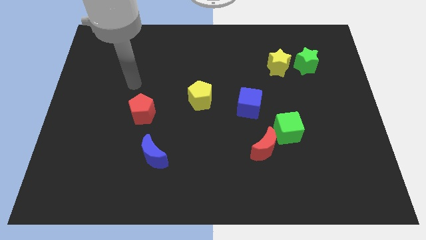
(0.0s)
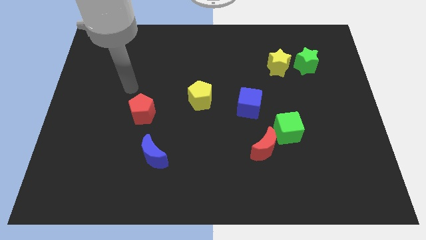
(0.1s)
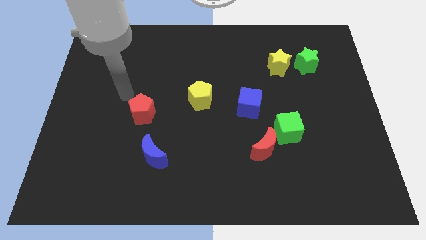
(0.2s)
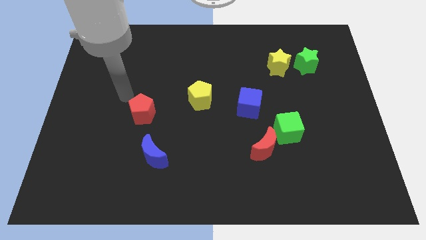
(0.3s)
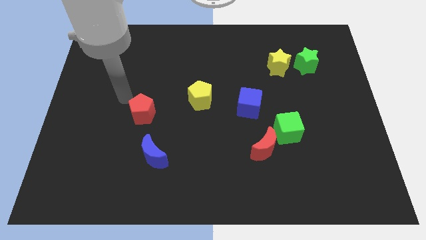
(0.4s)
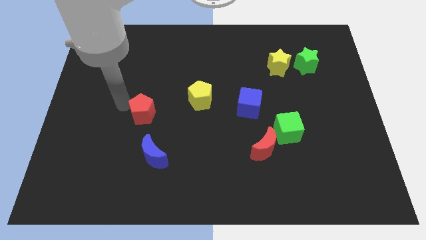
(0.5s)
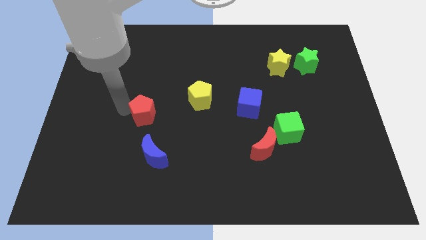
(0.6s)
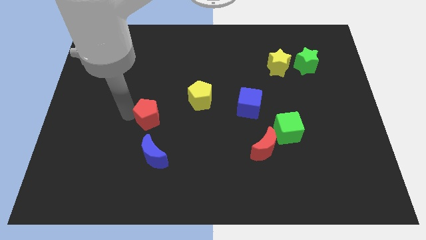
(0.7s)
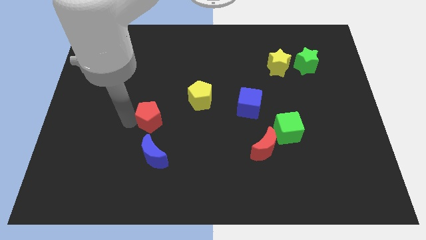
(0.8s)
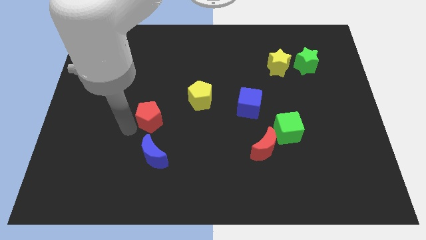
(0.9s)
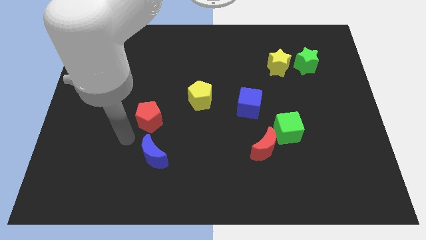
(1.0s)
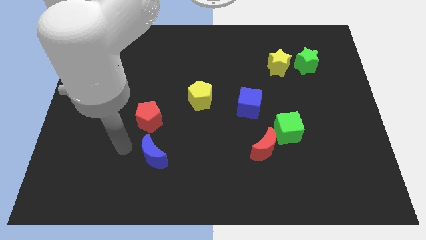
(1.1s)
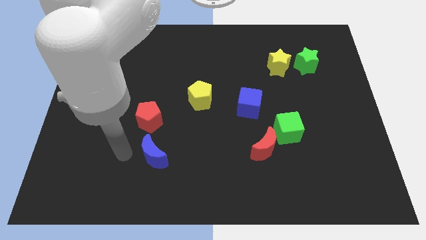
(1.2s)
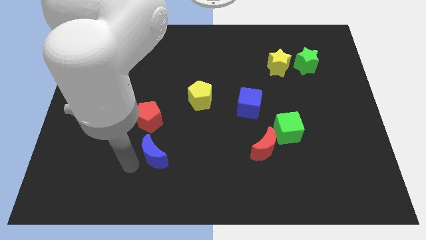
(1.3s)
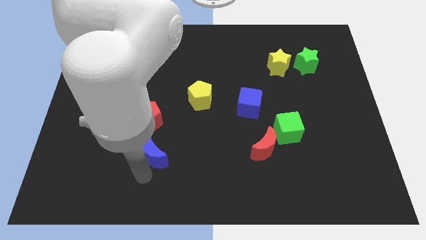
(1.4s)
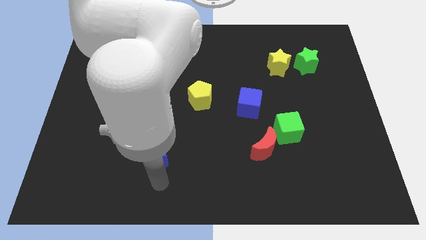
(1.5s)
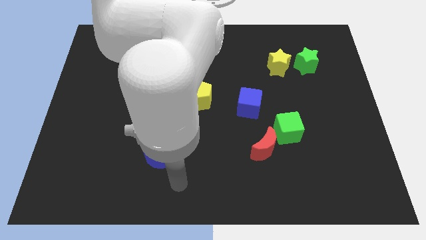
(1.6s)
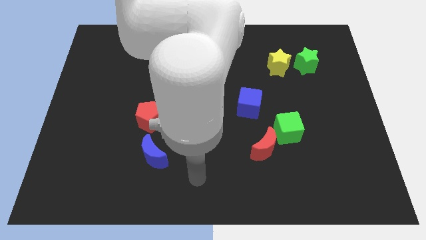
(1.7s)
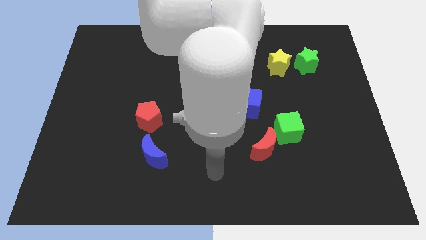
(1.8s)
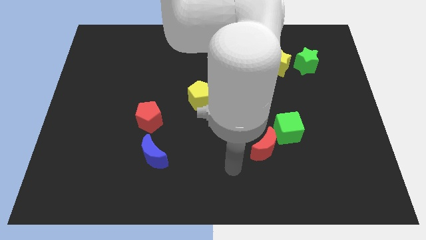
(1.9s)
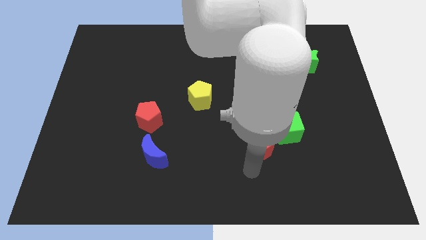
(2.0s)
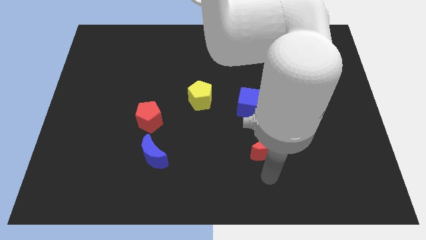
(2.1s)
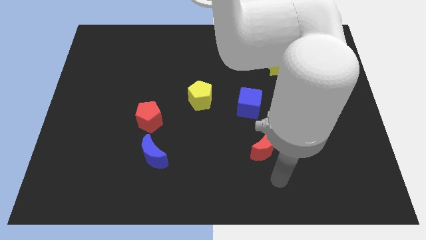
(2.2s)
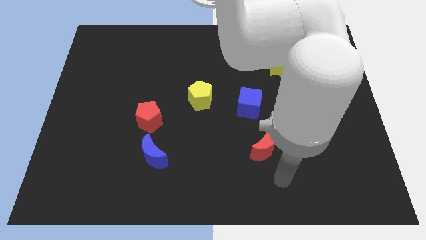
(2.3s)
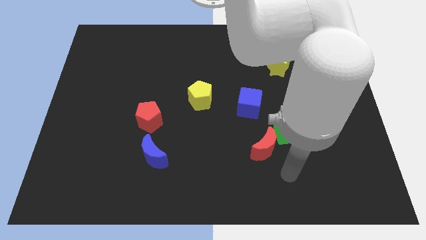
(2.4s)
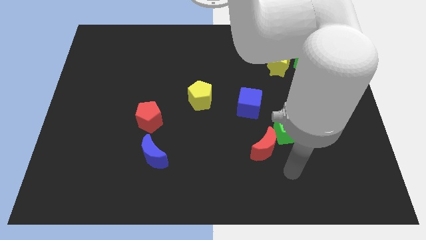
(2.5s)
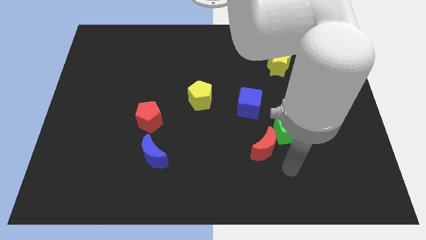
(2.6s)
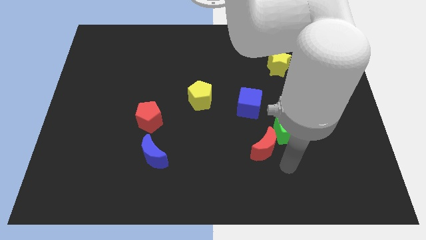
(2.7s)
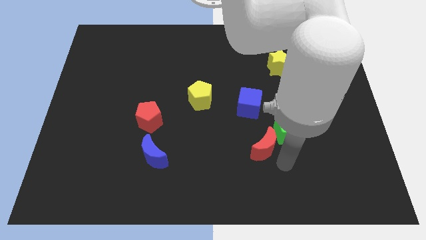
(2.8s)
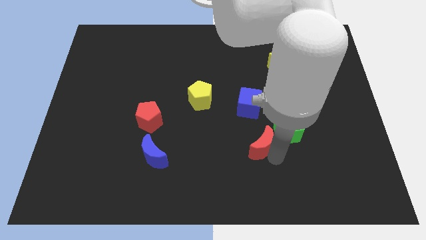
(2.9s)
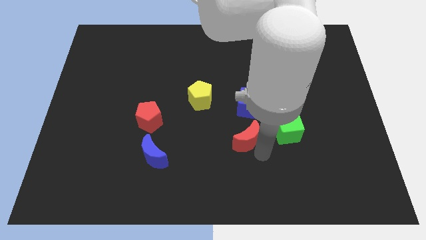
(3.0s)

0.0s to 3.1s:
move the red moon vertically below the blue cube

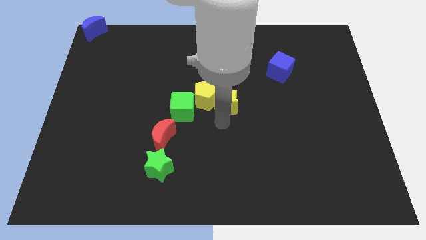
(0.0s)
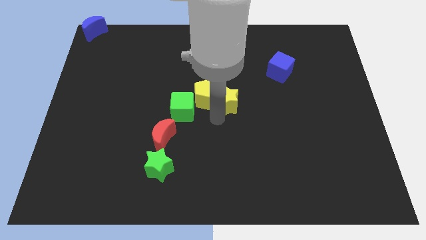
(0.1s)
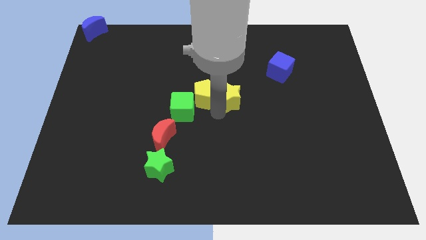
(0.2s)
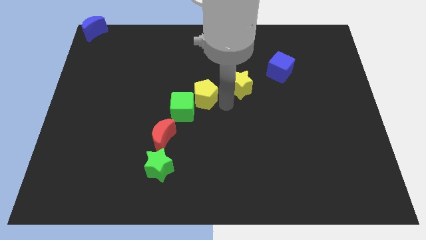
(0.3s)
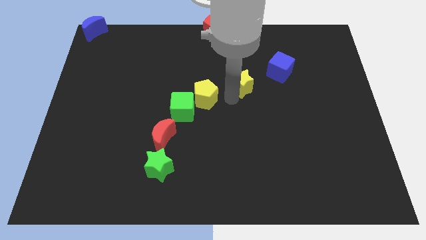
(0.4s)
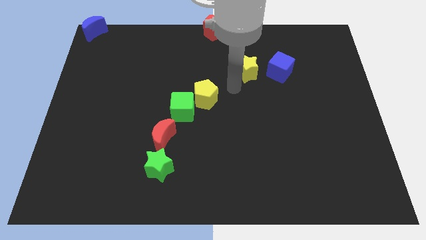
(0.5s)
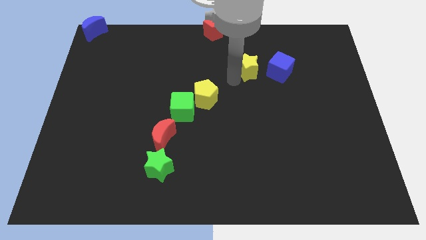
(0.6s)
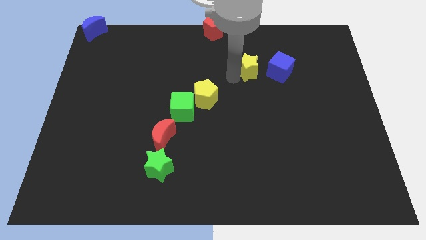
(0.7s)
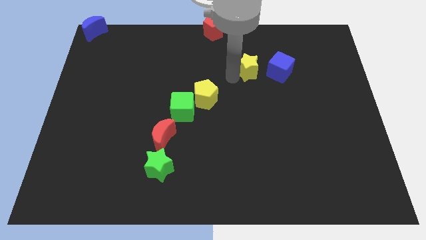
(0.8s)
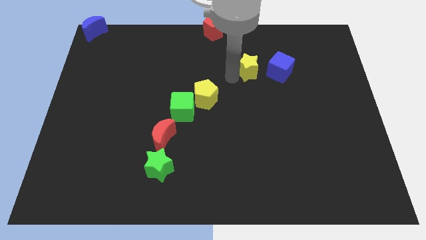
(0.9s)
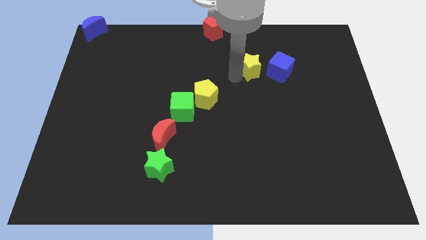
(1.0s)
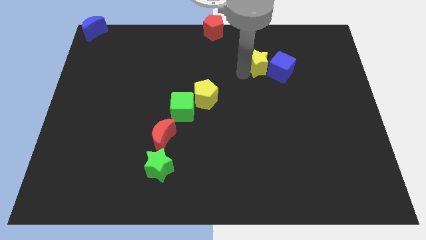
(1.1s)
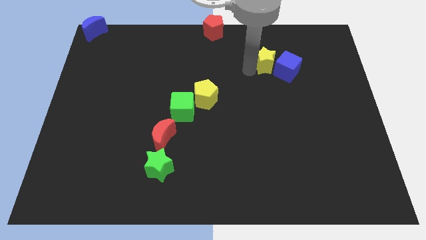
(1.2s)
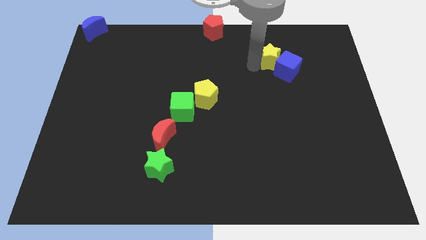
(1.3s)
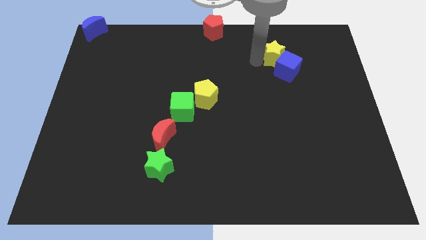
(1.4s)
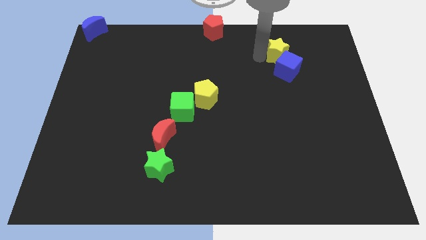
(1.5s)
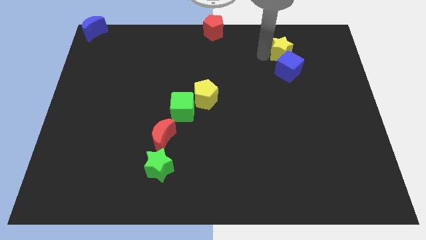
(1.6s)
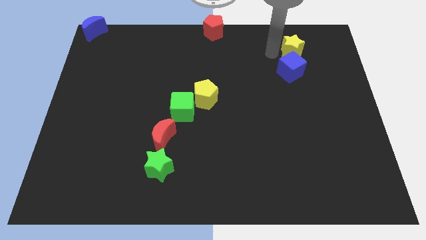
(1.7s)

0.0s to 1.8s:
push the yellow star to the top of the blue cube

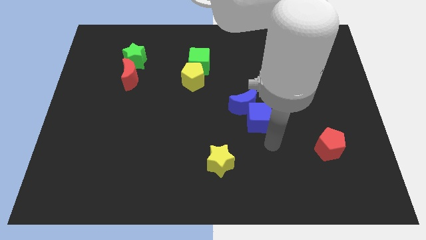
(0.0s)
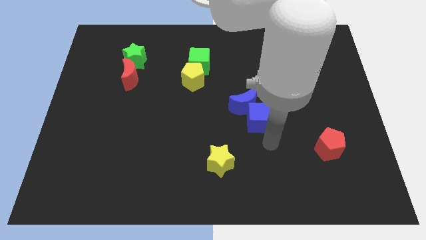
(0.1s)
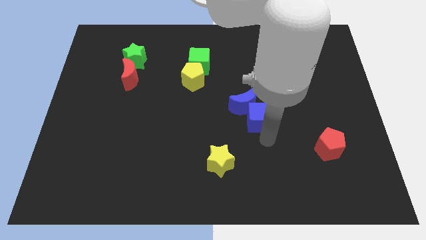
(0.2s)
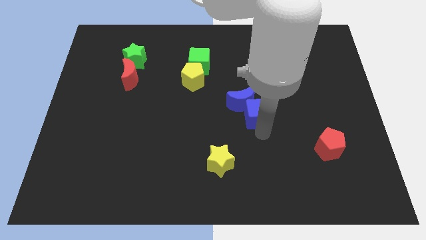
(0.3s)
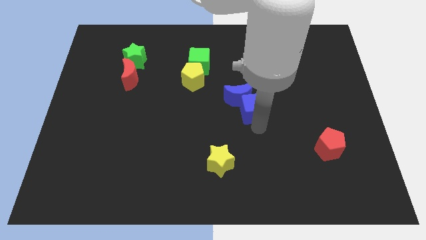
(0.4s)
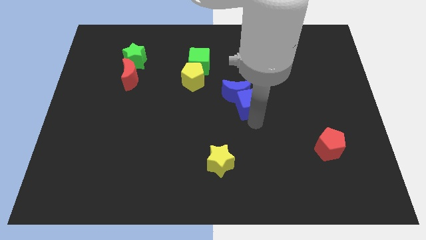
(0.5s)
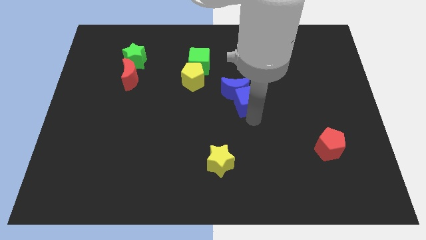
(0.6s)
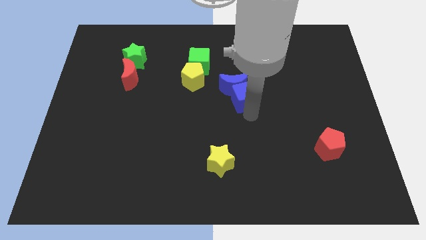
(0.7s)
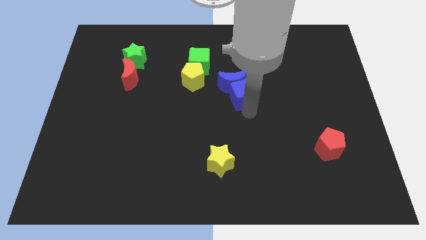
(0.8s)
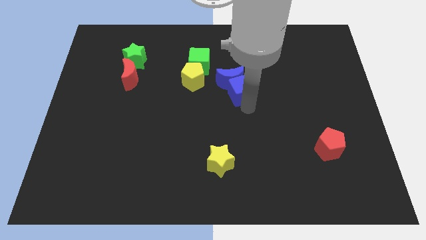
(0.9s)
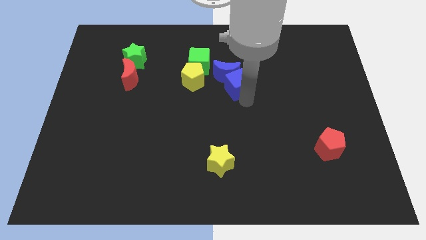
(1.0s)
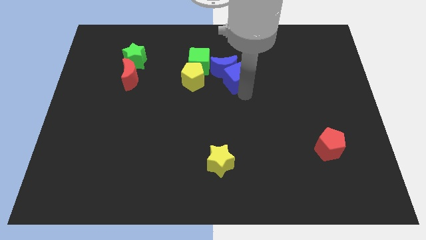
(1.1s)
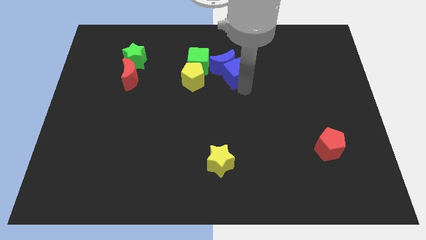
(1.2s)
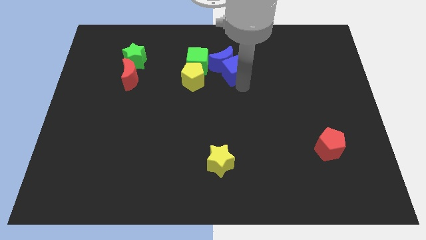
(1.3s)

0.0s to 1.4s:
slide the blue block and the crescent towards the right side of the green cube

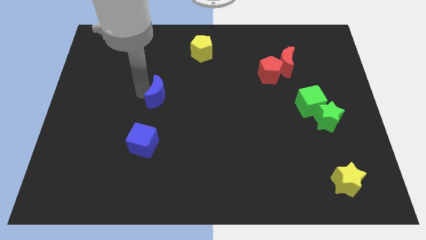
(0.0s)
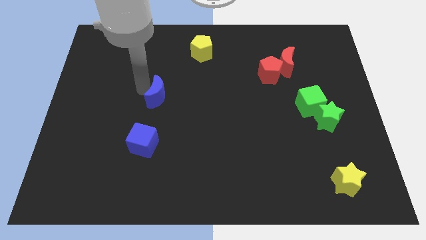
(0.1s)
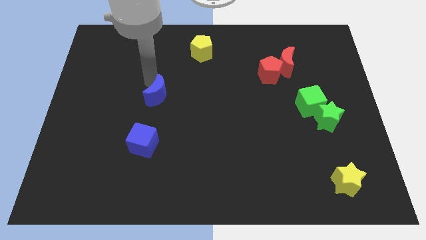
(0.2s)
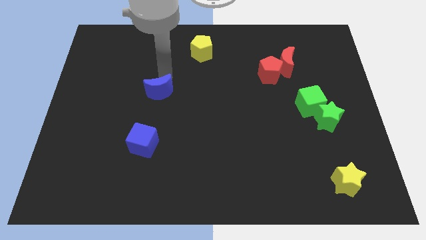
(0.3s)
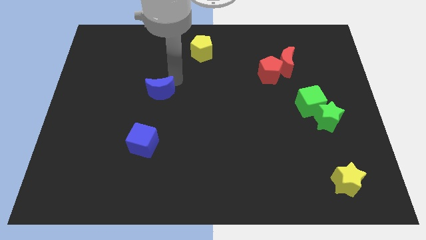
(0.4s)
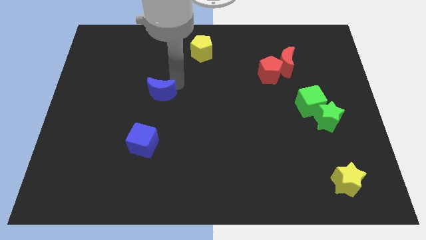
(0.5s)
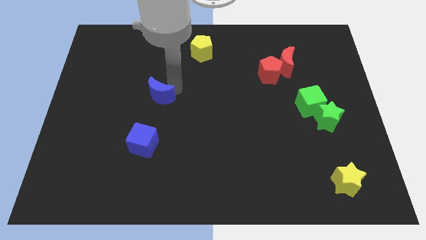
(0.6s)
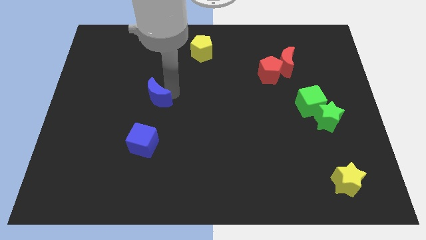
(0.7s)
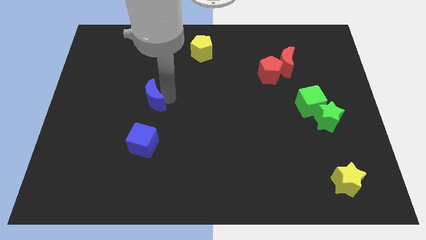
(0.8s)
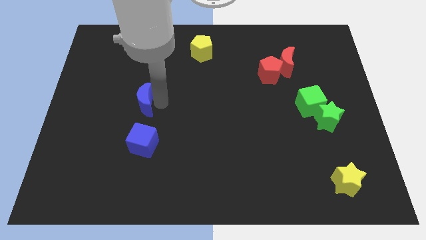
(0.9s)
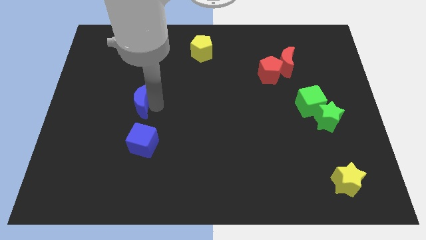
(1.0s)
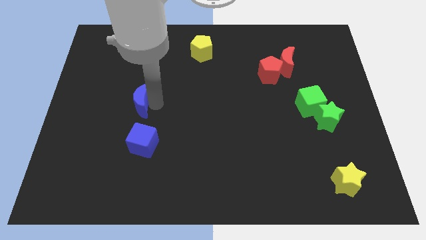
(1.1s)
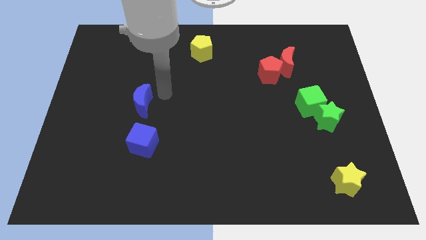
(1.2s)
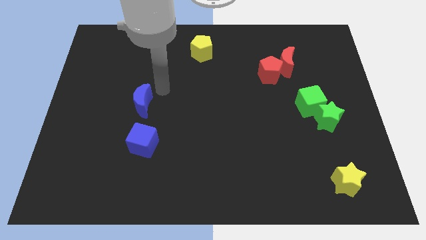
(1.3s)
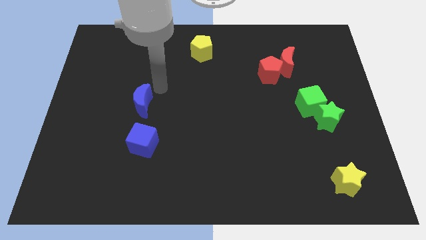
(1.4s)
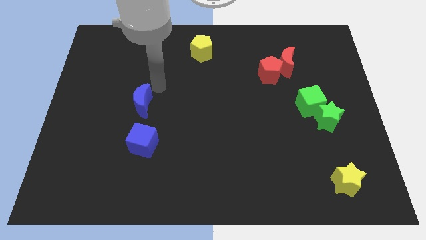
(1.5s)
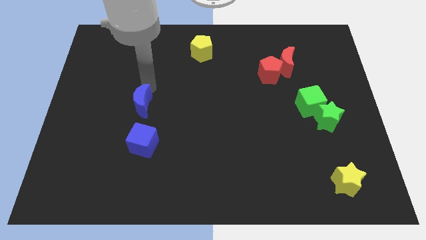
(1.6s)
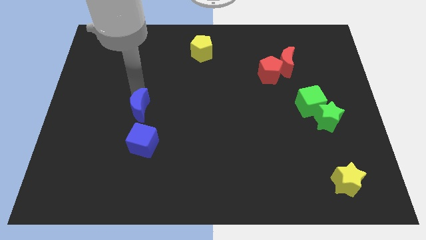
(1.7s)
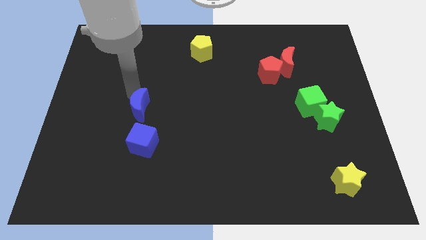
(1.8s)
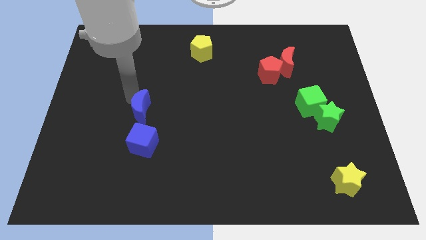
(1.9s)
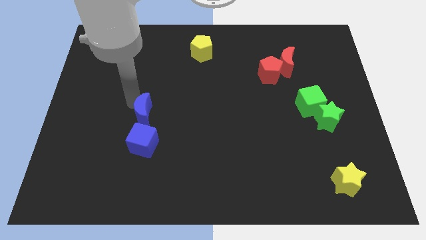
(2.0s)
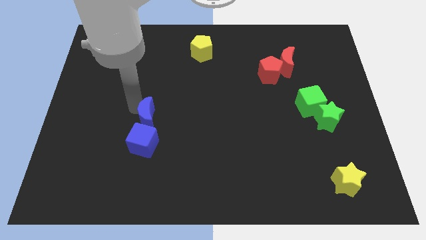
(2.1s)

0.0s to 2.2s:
push the blue crescent into the blue cube

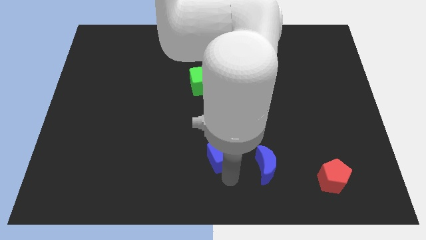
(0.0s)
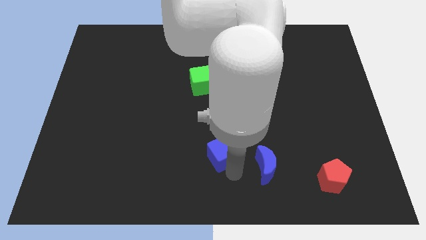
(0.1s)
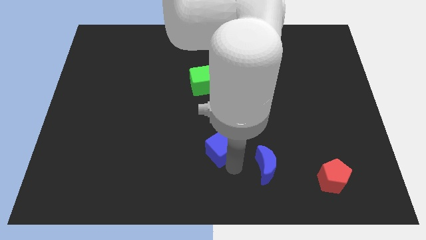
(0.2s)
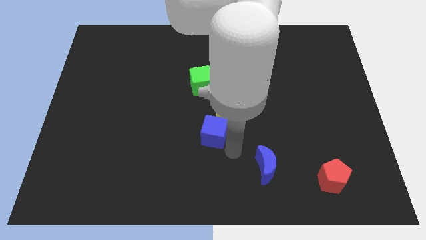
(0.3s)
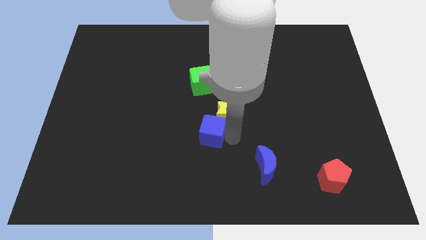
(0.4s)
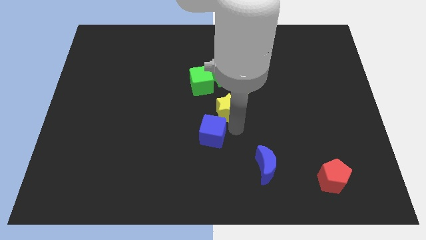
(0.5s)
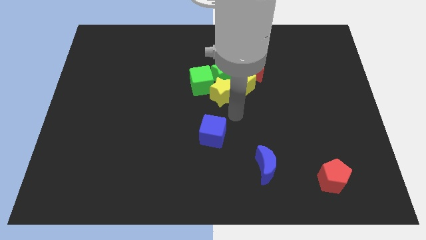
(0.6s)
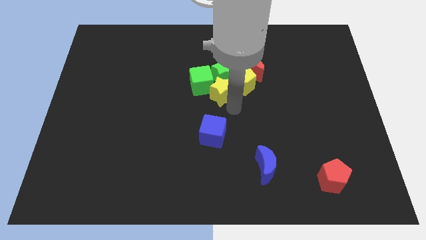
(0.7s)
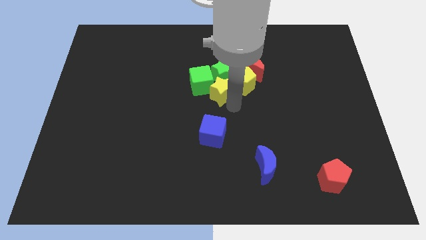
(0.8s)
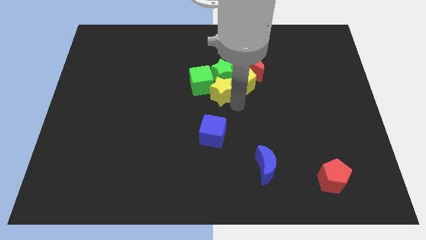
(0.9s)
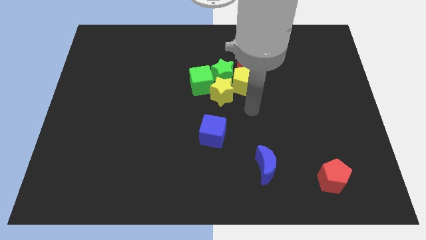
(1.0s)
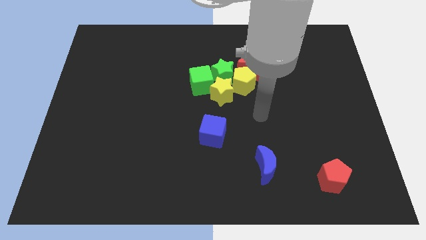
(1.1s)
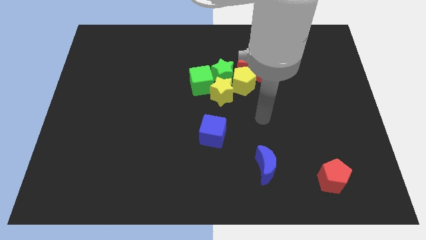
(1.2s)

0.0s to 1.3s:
move the yellow star into the bottom side of the green cube
